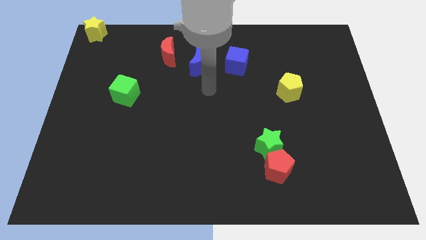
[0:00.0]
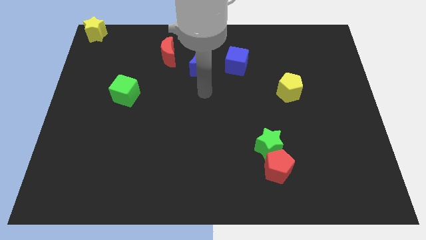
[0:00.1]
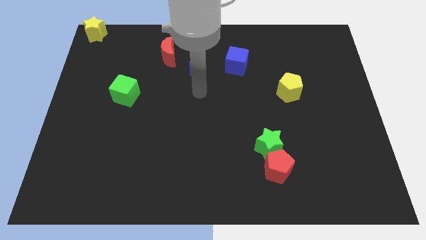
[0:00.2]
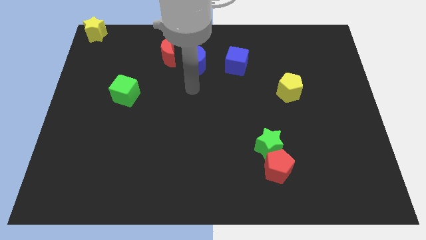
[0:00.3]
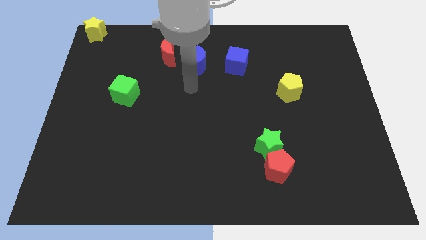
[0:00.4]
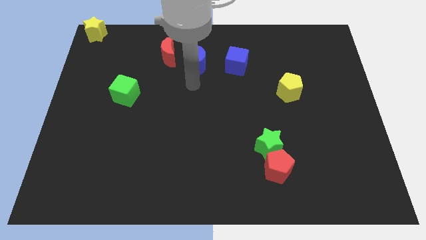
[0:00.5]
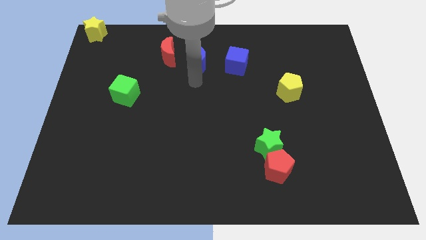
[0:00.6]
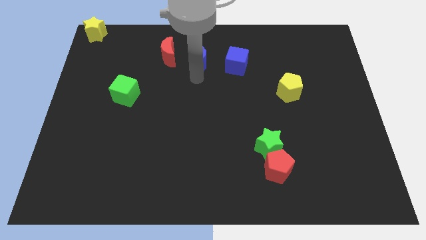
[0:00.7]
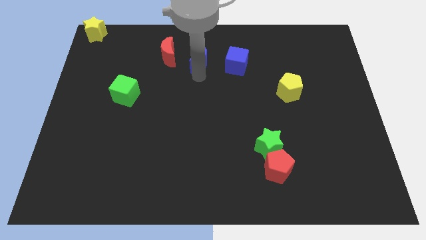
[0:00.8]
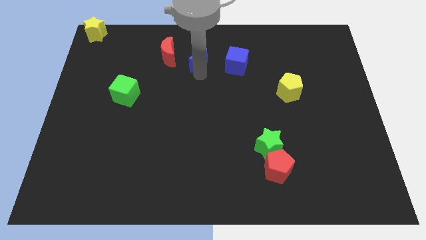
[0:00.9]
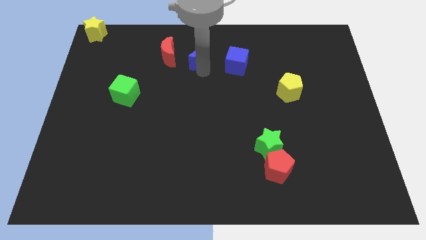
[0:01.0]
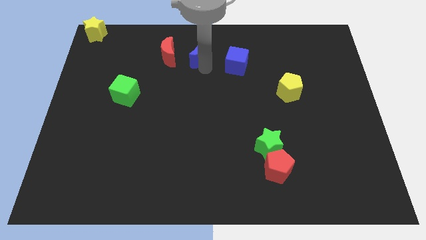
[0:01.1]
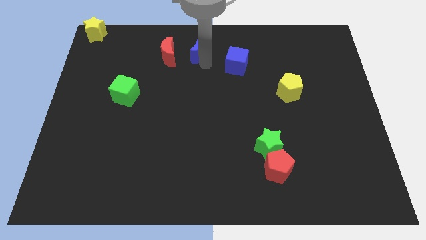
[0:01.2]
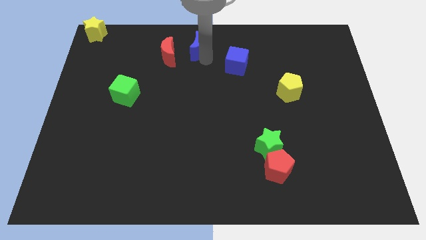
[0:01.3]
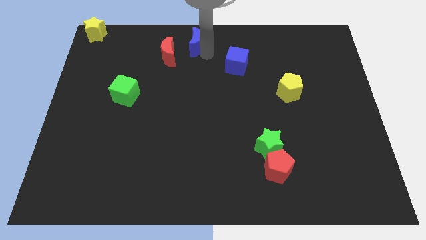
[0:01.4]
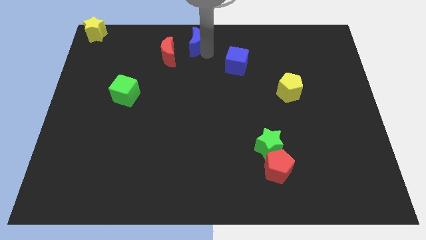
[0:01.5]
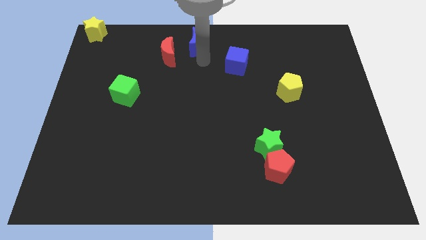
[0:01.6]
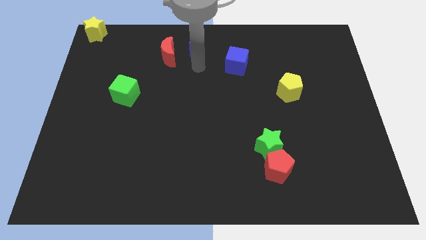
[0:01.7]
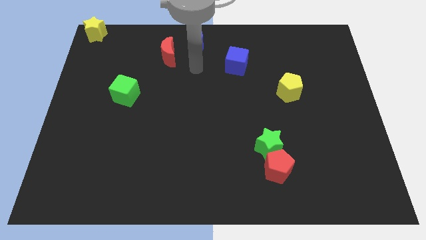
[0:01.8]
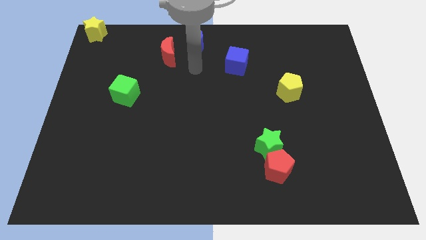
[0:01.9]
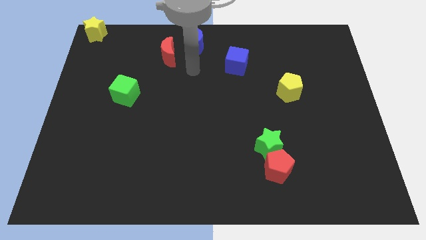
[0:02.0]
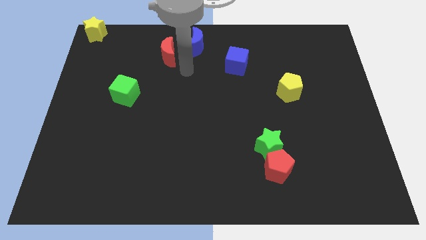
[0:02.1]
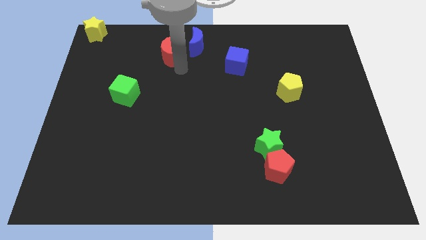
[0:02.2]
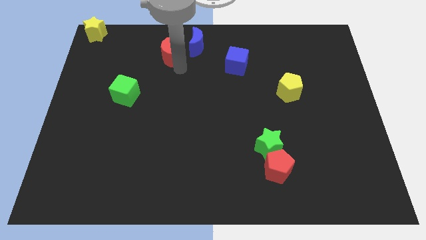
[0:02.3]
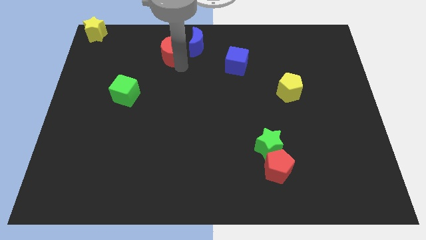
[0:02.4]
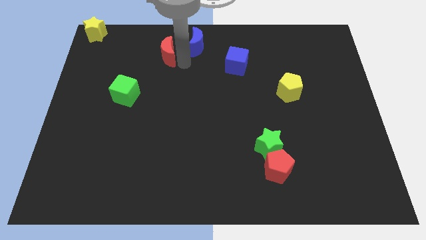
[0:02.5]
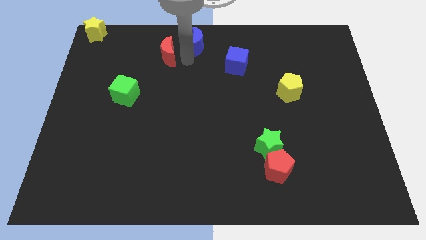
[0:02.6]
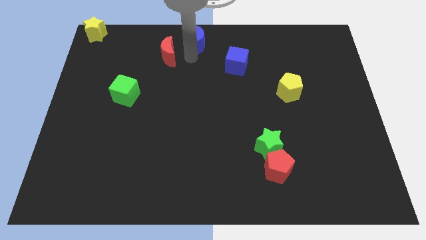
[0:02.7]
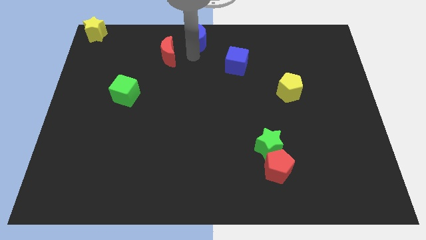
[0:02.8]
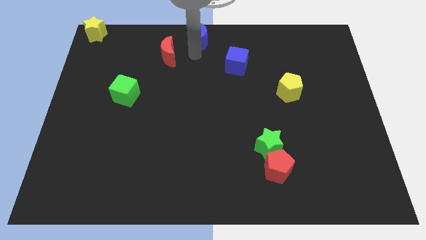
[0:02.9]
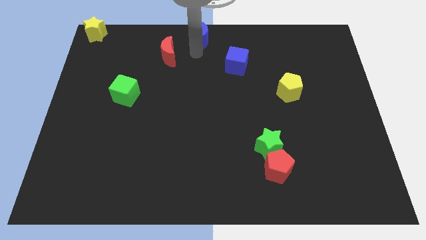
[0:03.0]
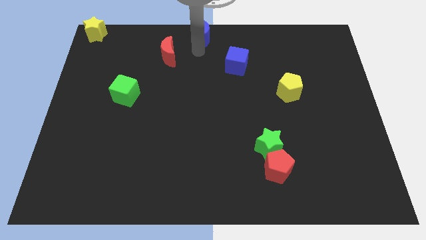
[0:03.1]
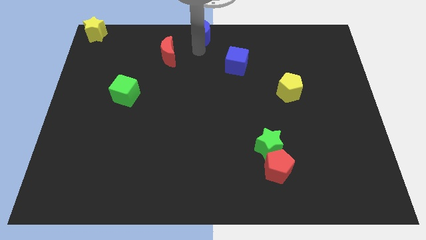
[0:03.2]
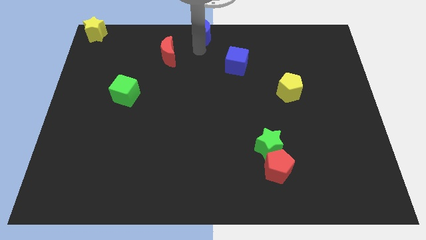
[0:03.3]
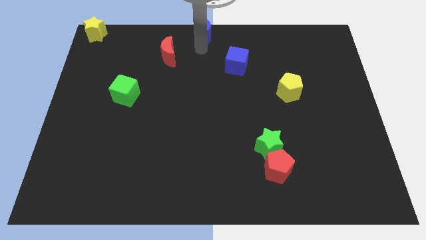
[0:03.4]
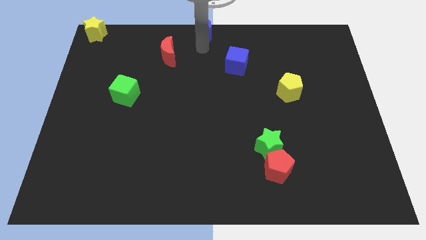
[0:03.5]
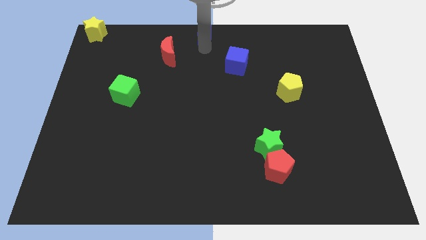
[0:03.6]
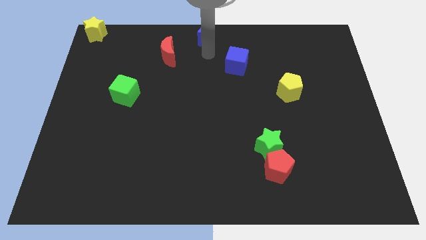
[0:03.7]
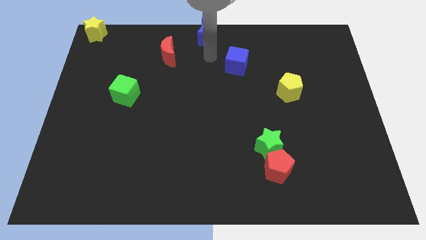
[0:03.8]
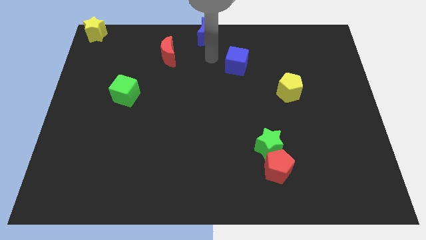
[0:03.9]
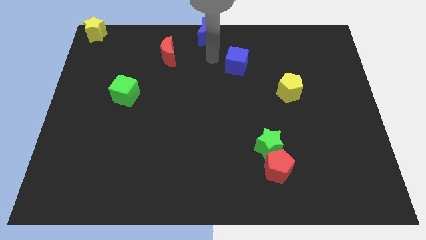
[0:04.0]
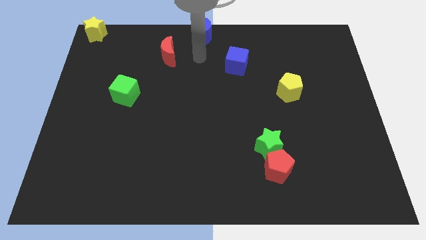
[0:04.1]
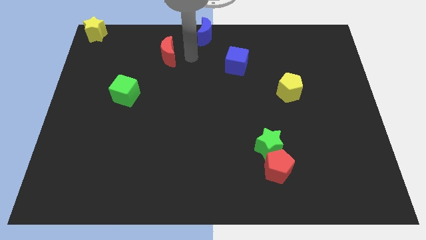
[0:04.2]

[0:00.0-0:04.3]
push the blue moon to the top center

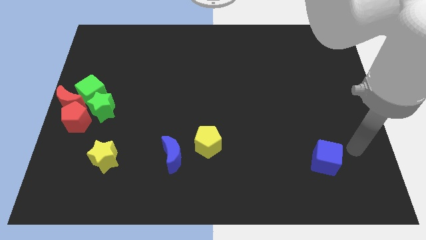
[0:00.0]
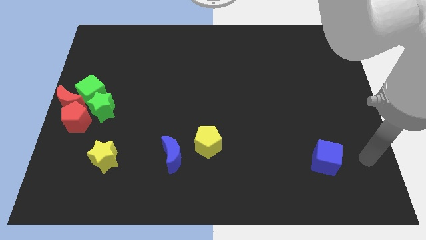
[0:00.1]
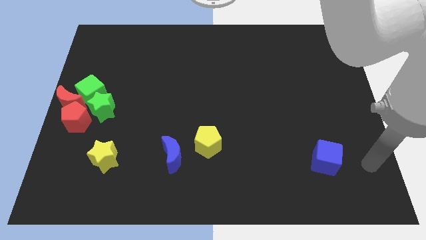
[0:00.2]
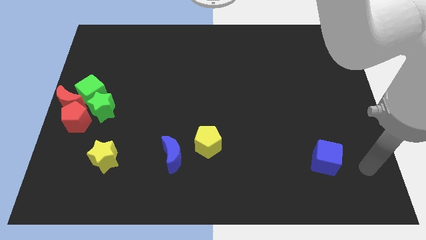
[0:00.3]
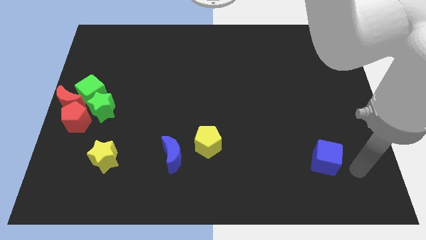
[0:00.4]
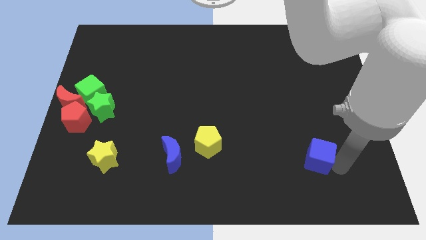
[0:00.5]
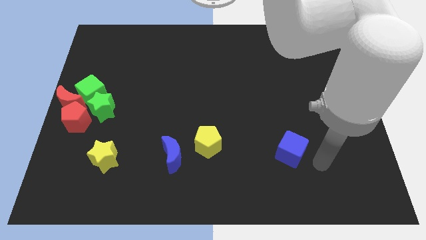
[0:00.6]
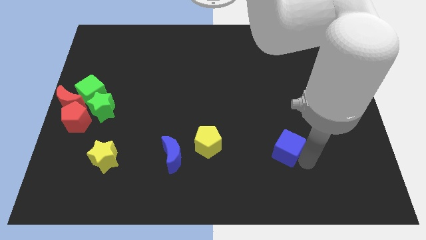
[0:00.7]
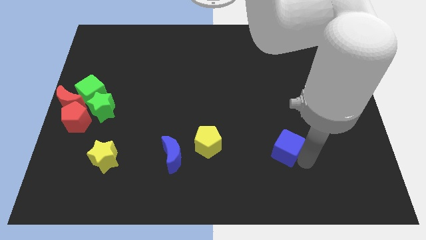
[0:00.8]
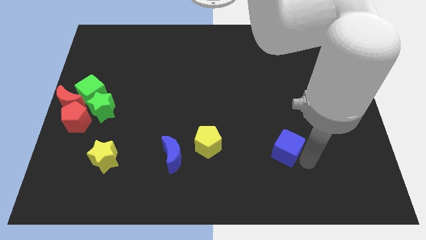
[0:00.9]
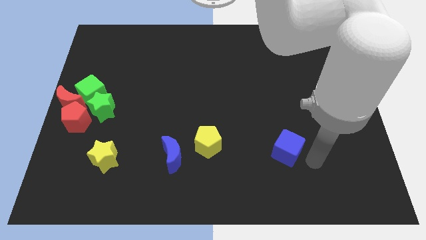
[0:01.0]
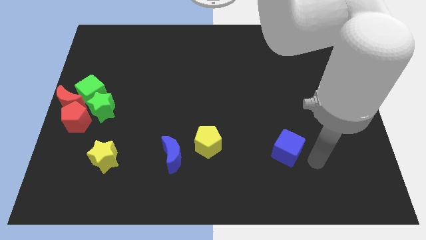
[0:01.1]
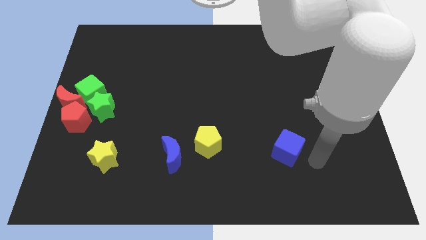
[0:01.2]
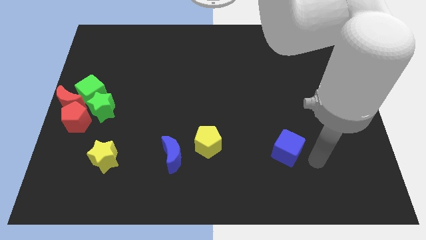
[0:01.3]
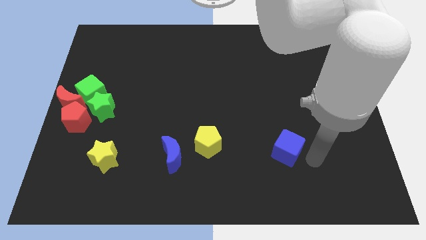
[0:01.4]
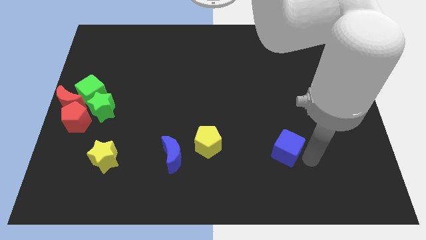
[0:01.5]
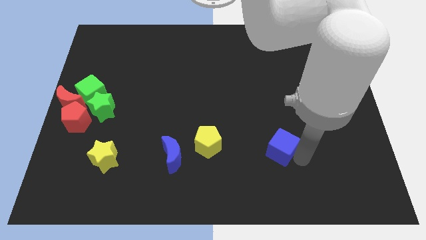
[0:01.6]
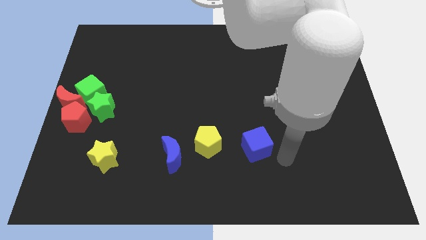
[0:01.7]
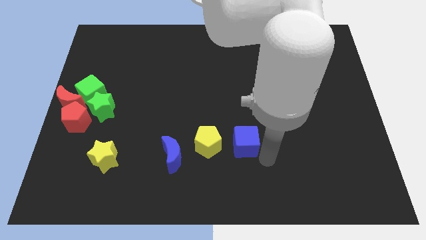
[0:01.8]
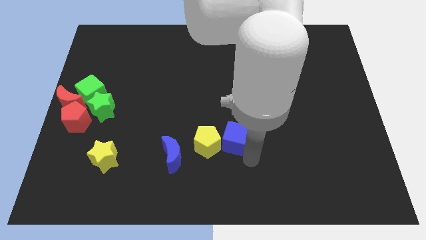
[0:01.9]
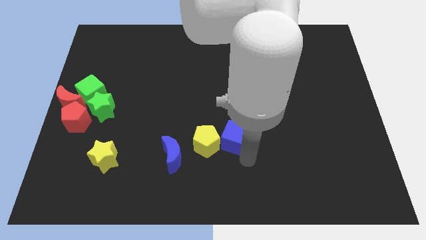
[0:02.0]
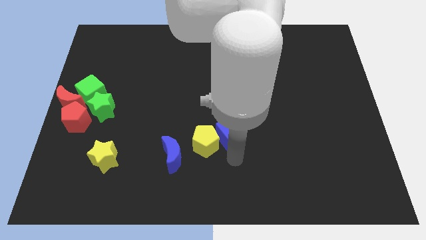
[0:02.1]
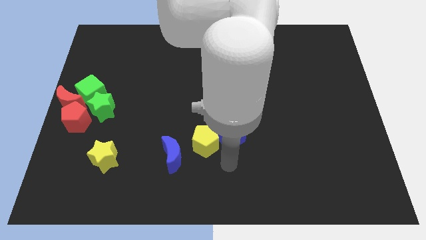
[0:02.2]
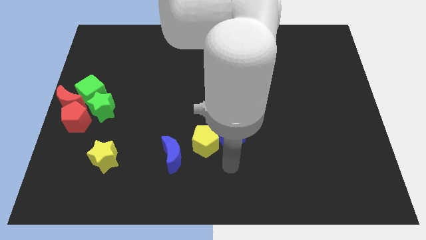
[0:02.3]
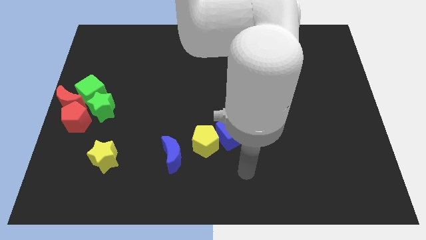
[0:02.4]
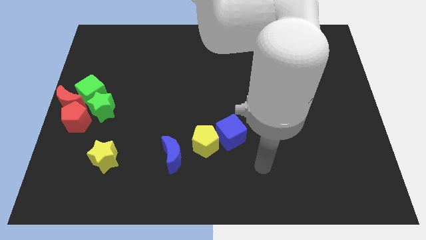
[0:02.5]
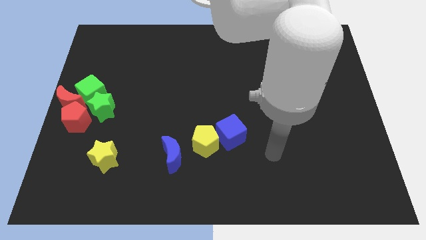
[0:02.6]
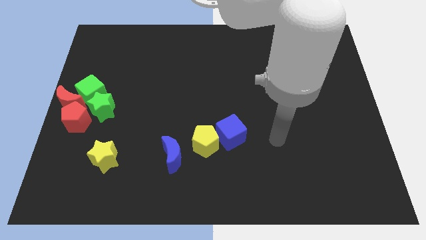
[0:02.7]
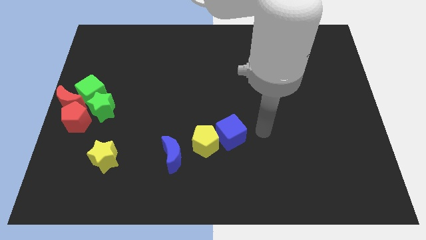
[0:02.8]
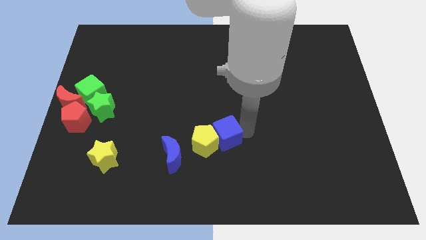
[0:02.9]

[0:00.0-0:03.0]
push the blue cube into the yellow pentagon

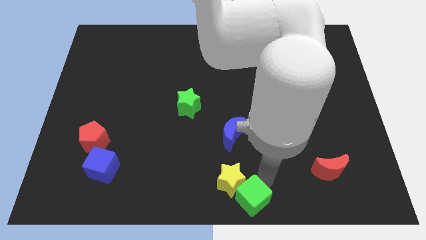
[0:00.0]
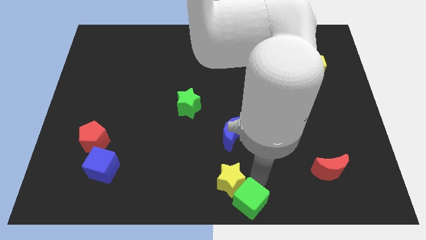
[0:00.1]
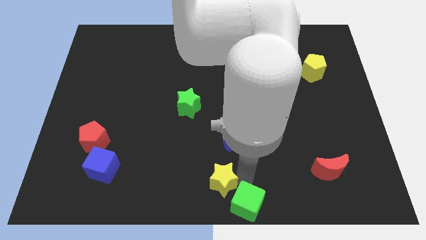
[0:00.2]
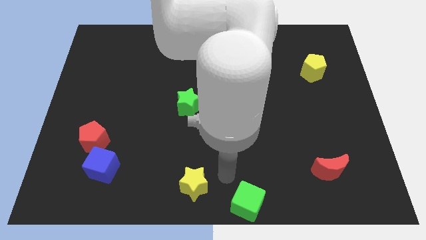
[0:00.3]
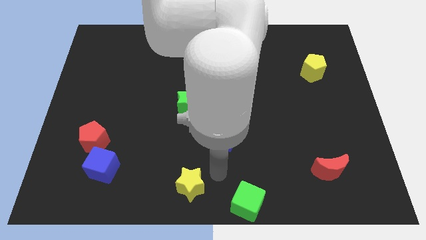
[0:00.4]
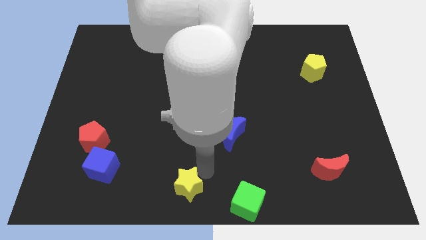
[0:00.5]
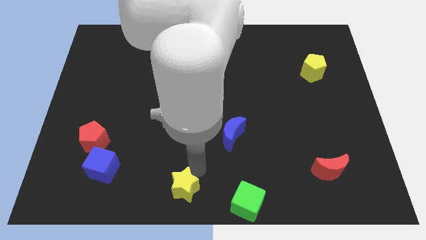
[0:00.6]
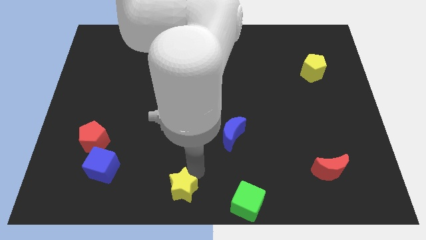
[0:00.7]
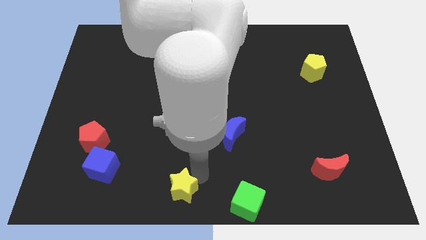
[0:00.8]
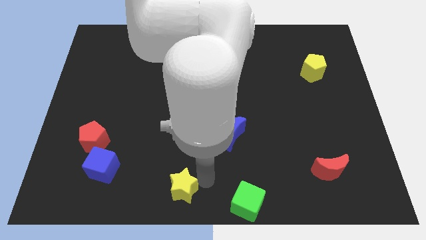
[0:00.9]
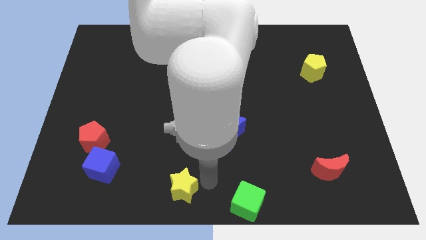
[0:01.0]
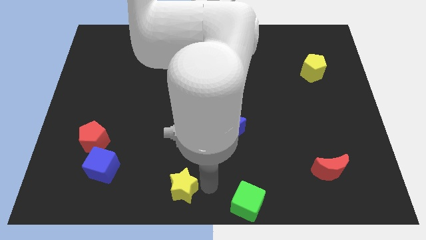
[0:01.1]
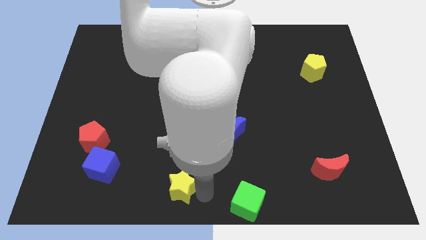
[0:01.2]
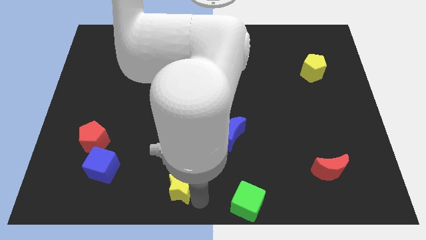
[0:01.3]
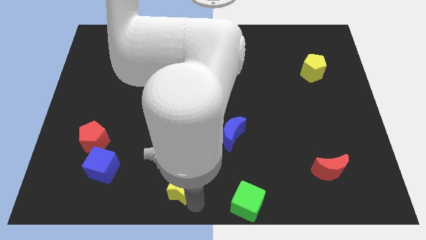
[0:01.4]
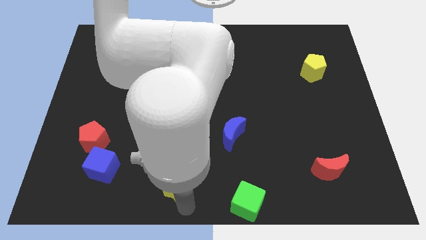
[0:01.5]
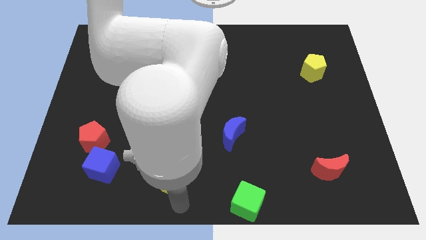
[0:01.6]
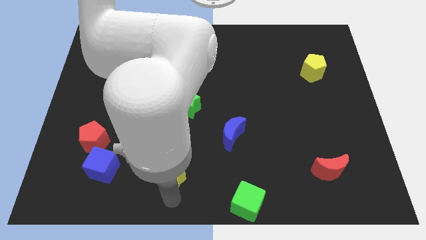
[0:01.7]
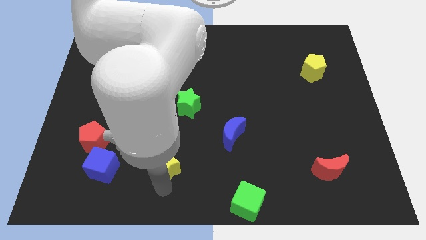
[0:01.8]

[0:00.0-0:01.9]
move yellow star towards blue cube
